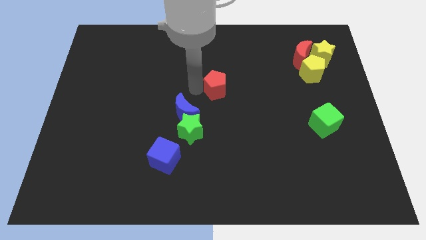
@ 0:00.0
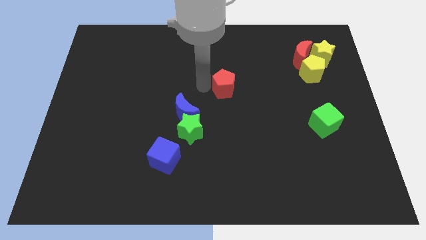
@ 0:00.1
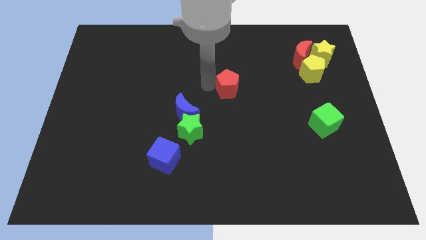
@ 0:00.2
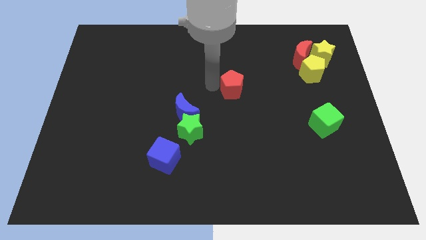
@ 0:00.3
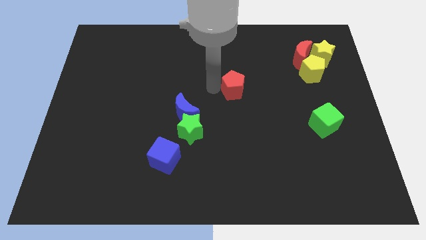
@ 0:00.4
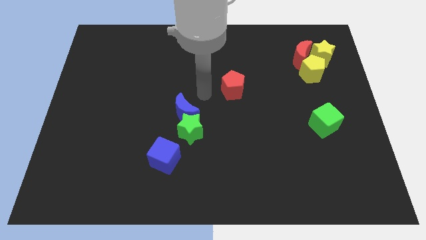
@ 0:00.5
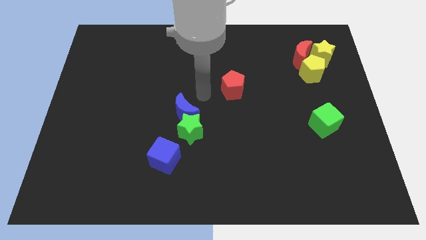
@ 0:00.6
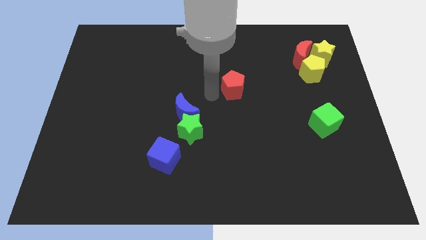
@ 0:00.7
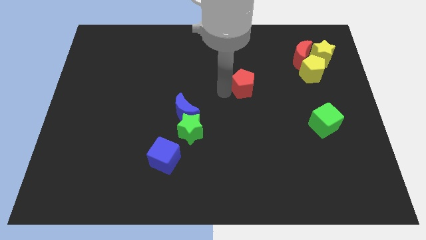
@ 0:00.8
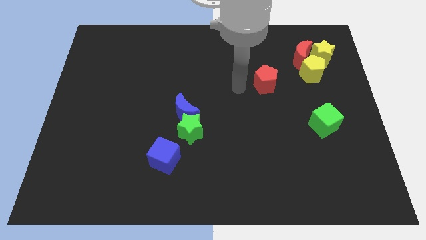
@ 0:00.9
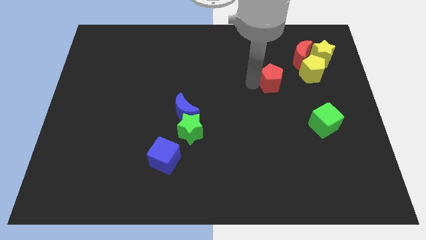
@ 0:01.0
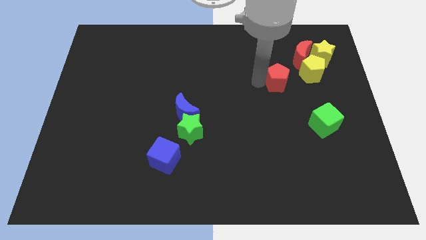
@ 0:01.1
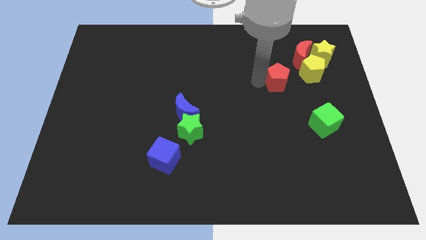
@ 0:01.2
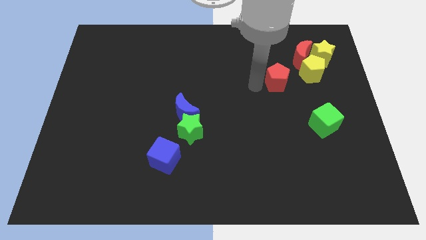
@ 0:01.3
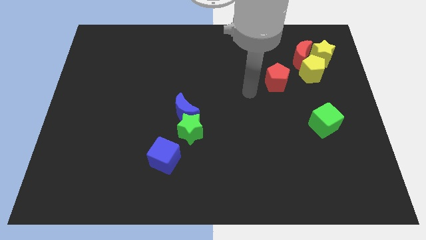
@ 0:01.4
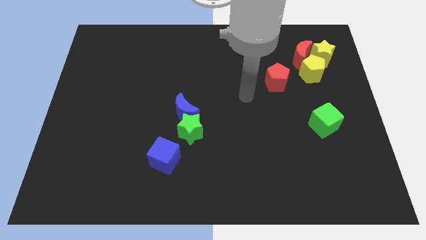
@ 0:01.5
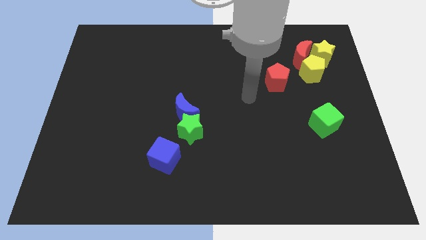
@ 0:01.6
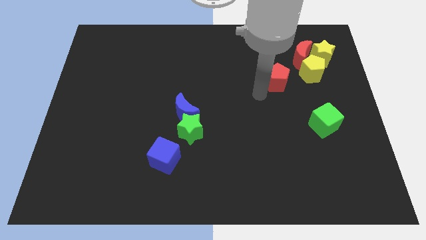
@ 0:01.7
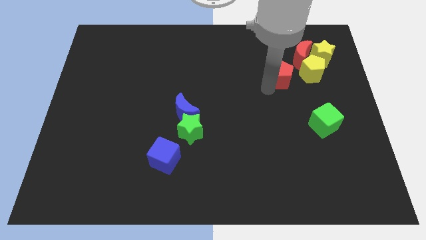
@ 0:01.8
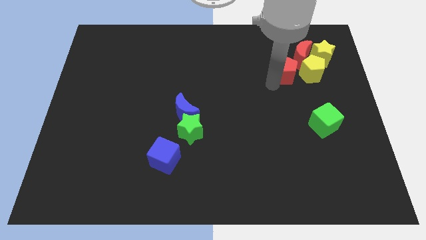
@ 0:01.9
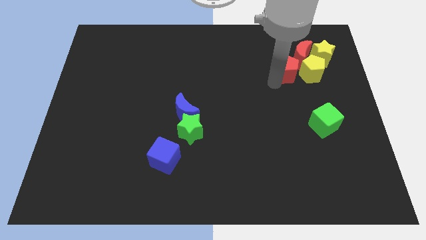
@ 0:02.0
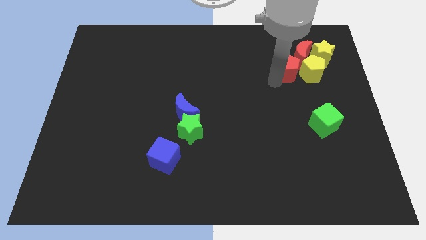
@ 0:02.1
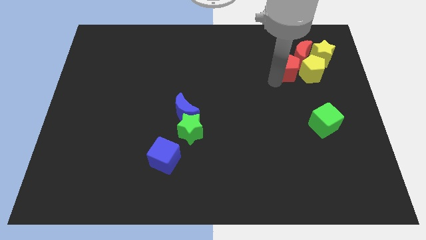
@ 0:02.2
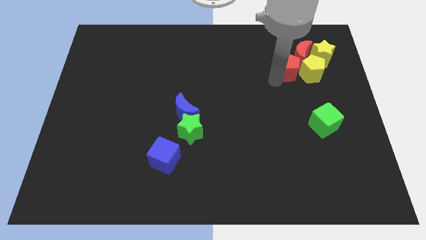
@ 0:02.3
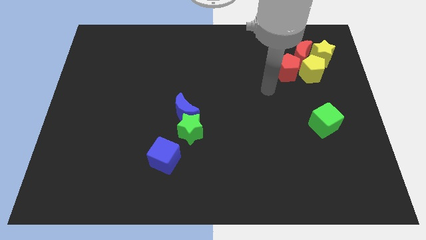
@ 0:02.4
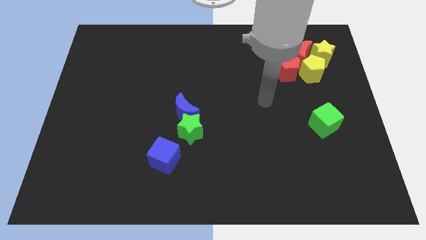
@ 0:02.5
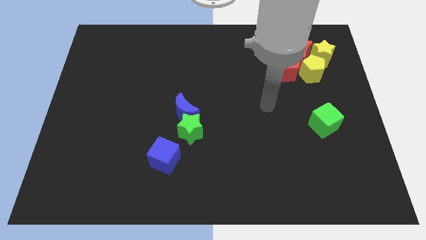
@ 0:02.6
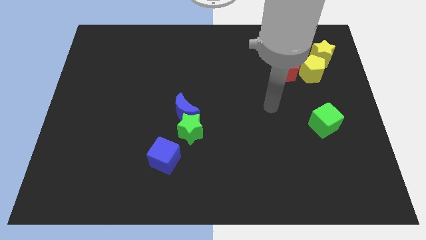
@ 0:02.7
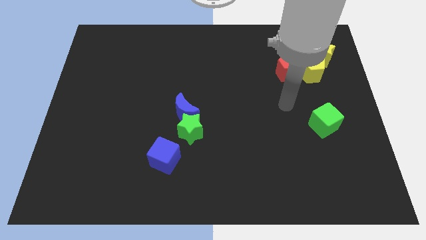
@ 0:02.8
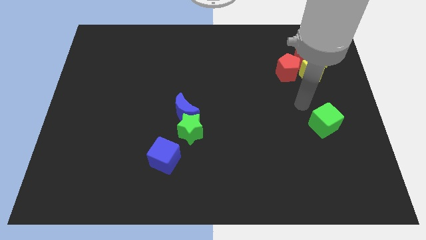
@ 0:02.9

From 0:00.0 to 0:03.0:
move the red pentagon towards the red crescent and yellow pentagon

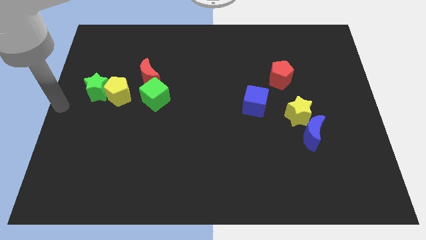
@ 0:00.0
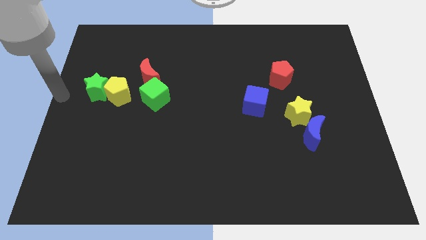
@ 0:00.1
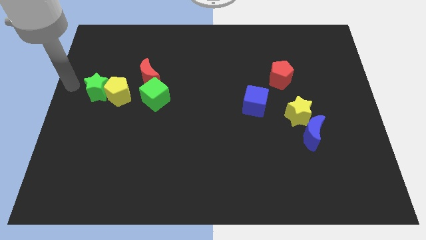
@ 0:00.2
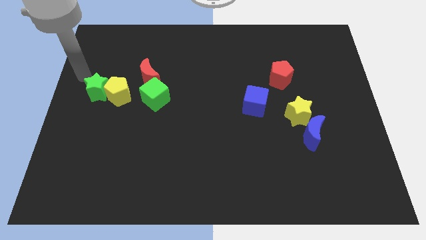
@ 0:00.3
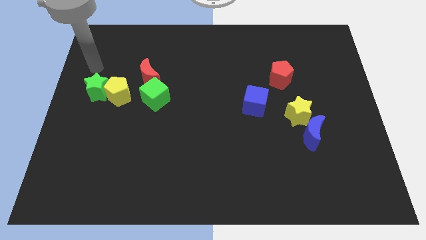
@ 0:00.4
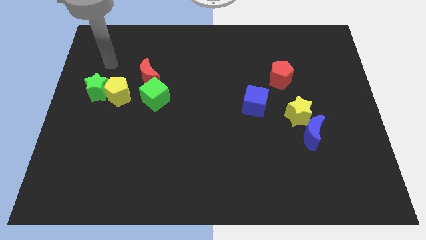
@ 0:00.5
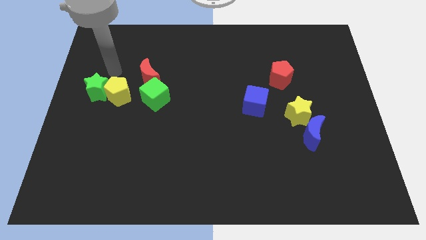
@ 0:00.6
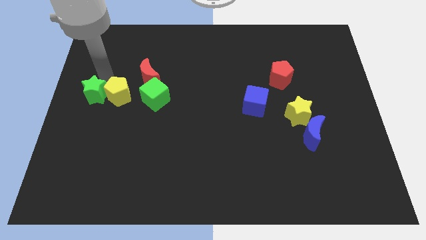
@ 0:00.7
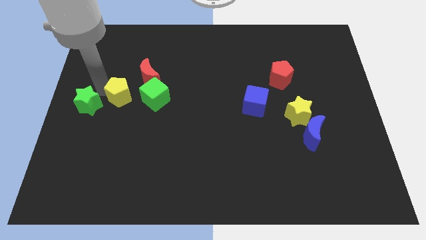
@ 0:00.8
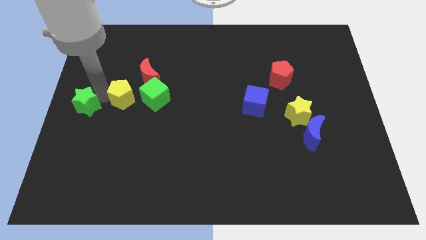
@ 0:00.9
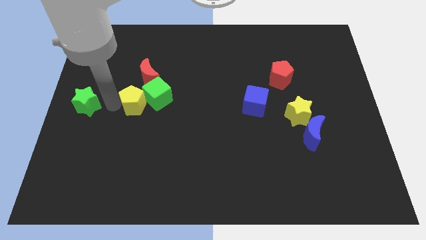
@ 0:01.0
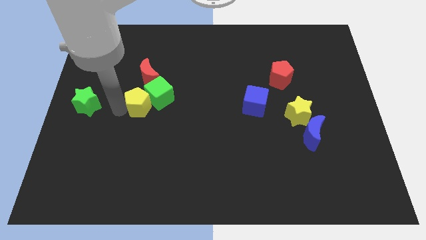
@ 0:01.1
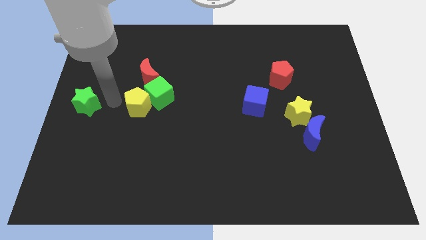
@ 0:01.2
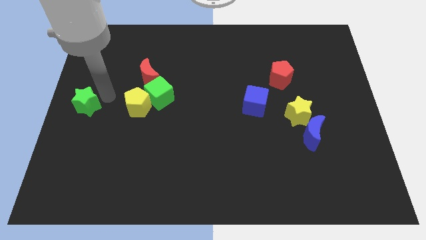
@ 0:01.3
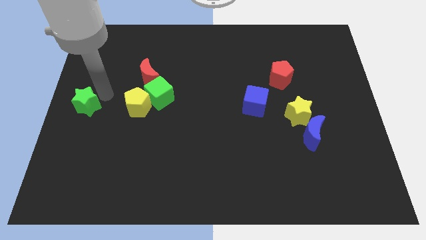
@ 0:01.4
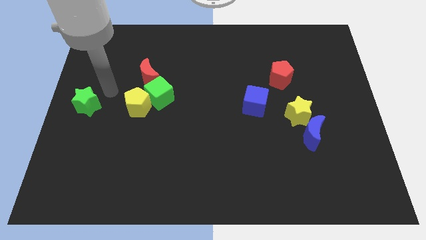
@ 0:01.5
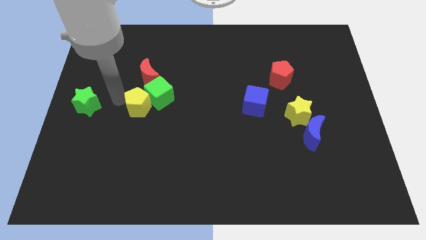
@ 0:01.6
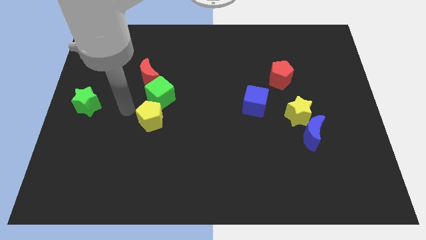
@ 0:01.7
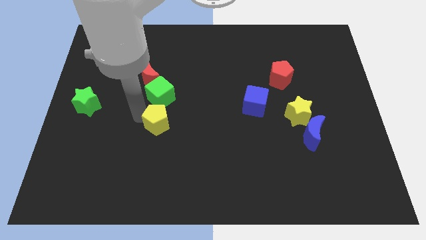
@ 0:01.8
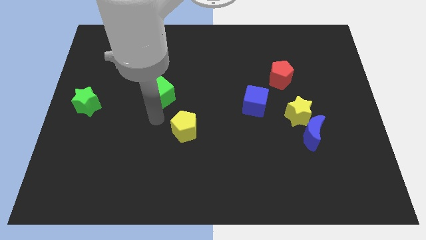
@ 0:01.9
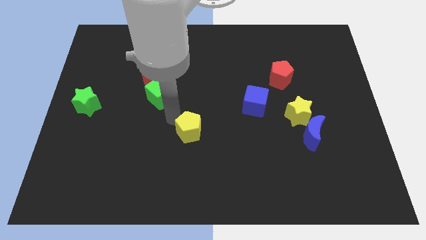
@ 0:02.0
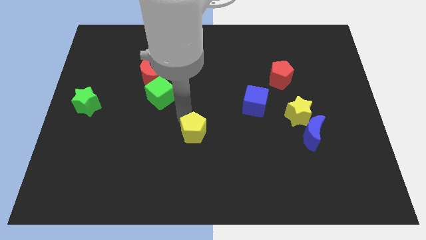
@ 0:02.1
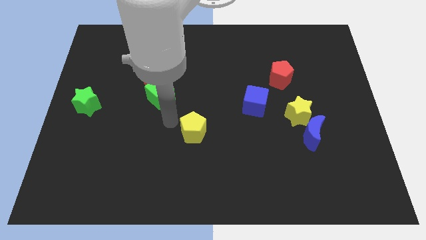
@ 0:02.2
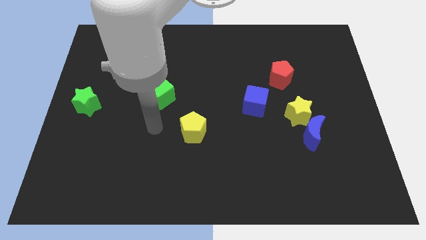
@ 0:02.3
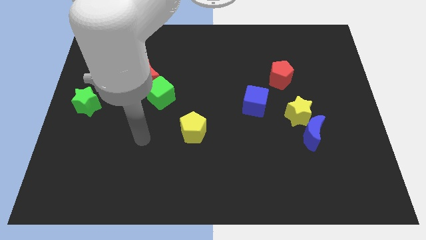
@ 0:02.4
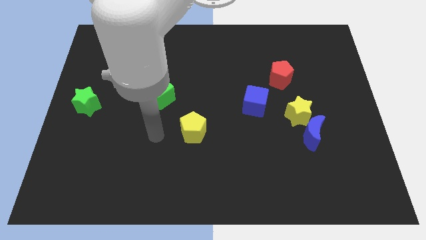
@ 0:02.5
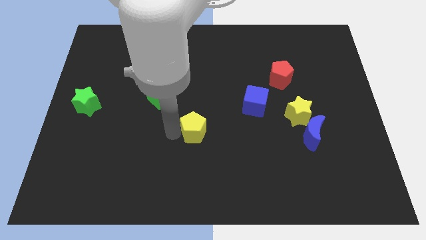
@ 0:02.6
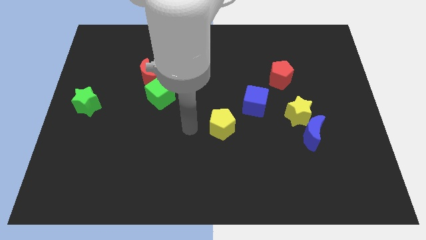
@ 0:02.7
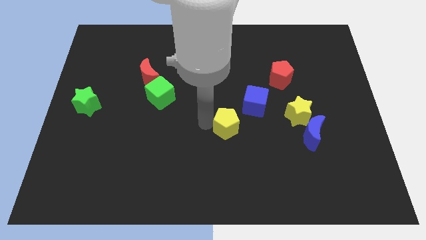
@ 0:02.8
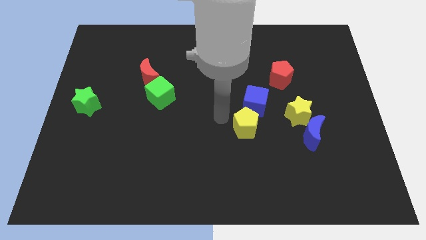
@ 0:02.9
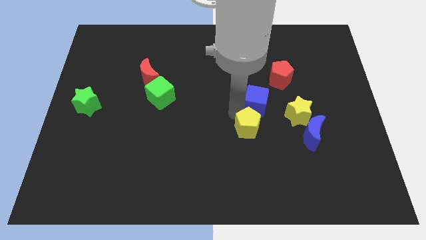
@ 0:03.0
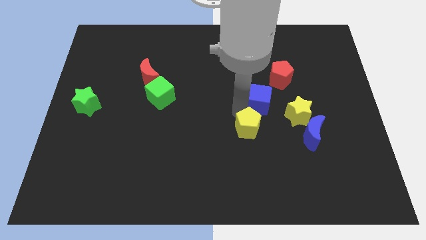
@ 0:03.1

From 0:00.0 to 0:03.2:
separate the green star and yellow pentagon

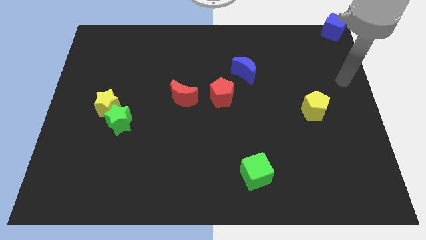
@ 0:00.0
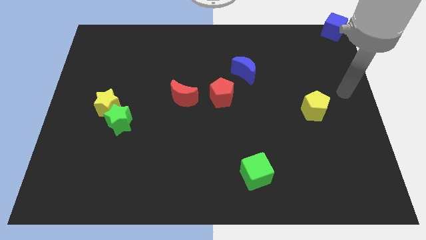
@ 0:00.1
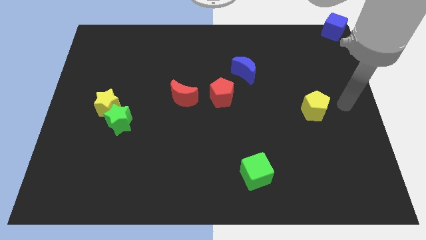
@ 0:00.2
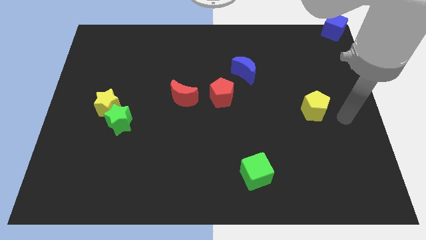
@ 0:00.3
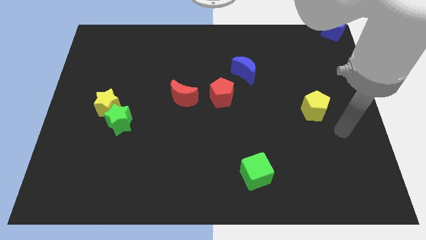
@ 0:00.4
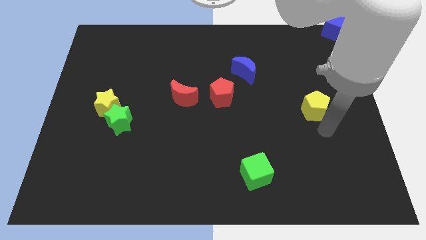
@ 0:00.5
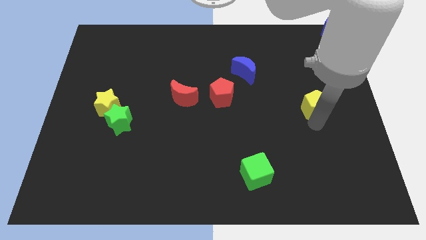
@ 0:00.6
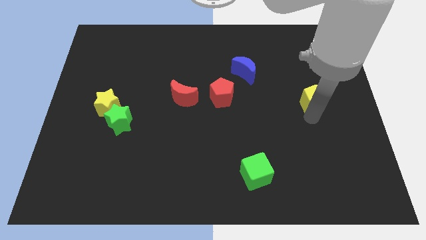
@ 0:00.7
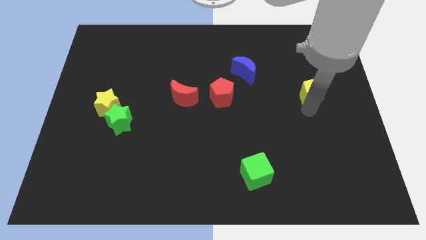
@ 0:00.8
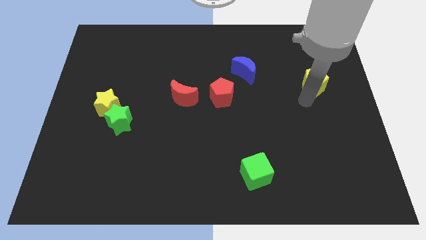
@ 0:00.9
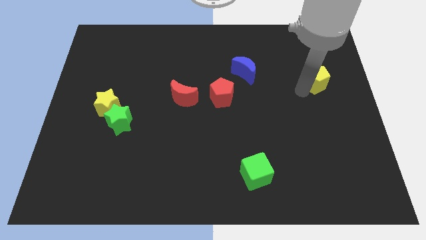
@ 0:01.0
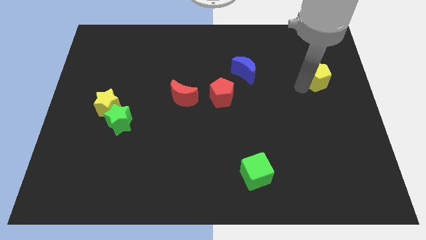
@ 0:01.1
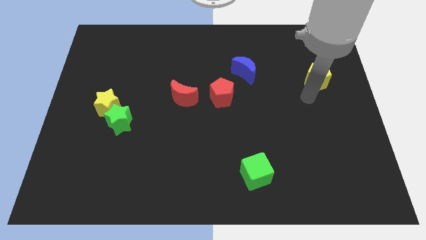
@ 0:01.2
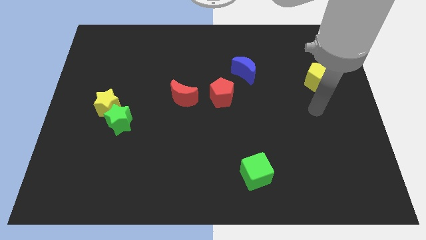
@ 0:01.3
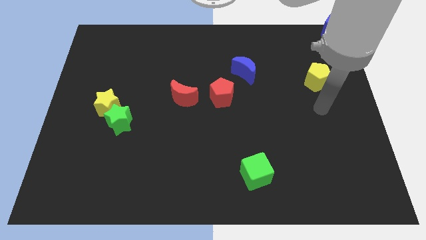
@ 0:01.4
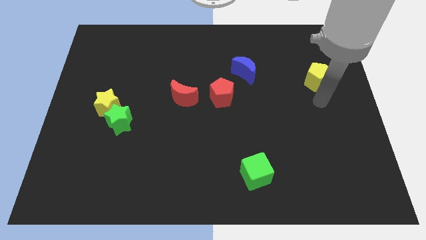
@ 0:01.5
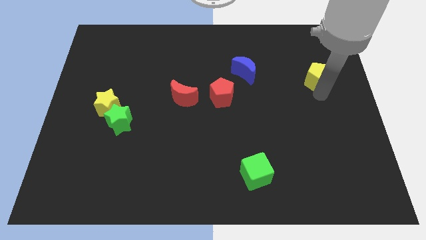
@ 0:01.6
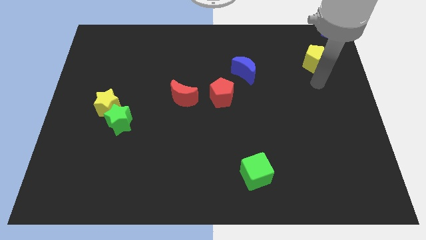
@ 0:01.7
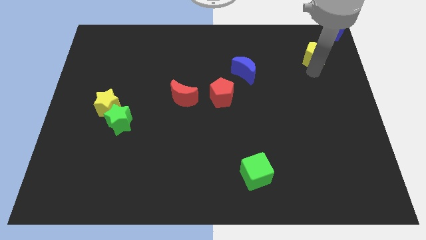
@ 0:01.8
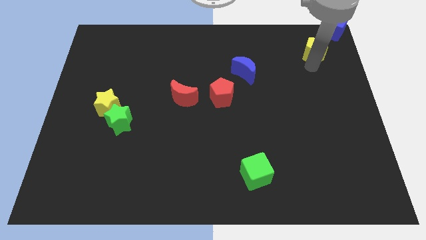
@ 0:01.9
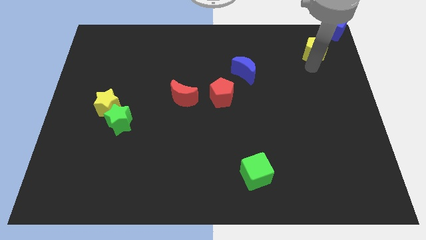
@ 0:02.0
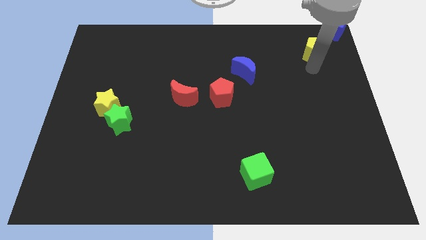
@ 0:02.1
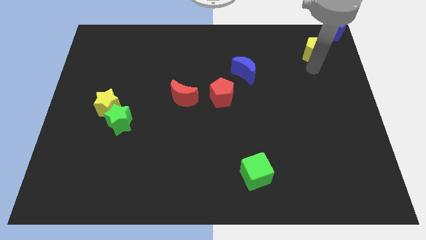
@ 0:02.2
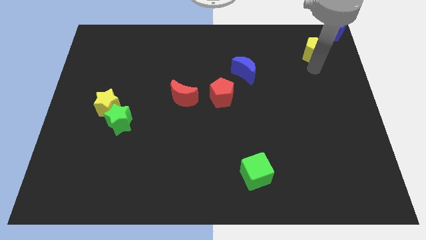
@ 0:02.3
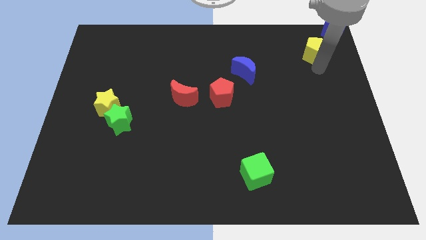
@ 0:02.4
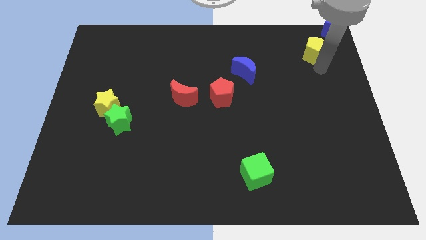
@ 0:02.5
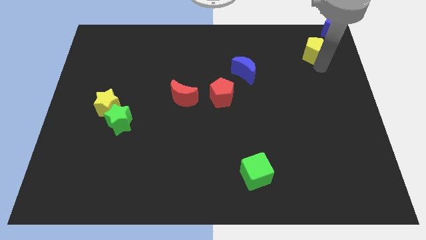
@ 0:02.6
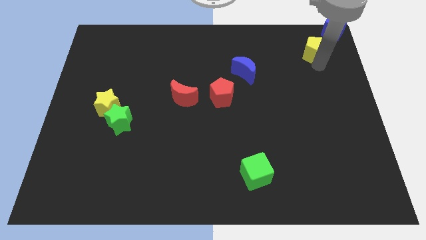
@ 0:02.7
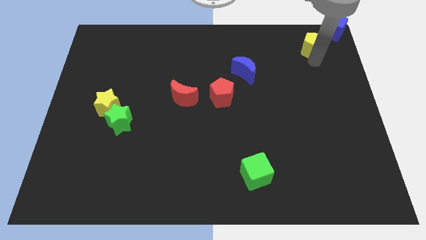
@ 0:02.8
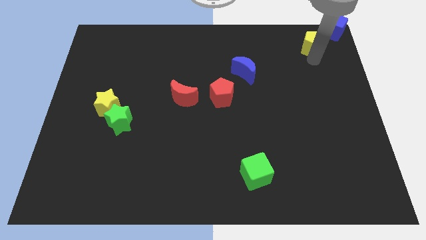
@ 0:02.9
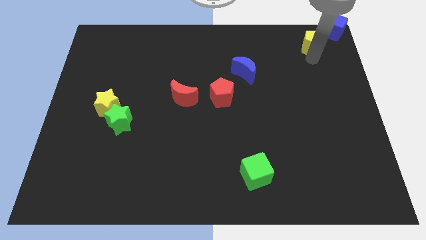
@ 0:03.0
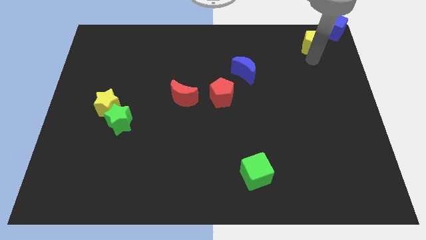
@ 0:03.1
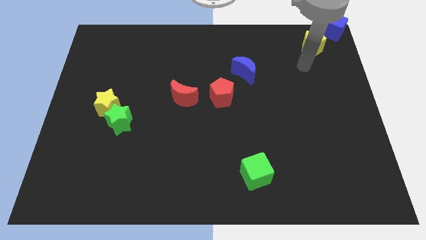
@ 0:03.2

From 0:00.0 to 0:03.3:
place the yellow pentagon below the blue block
